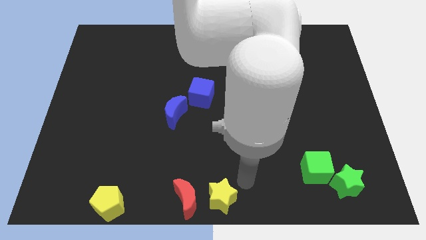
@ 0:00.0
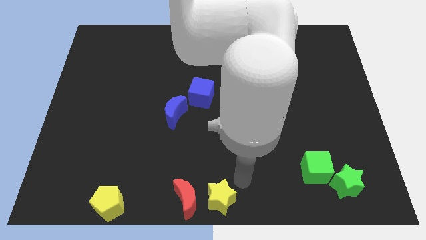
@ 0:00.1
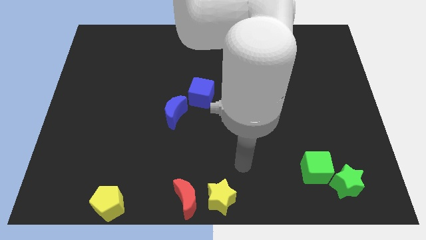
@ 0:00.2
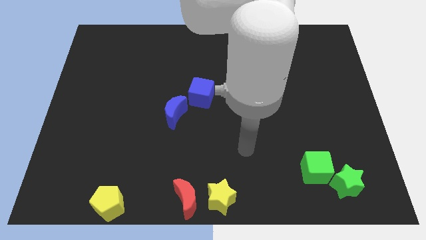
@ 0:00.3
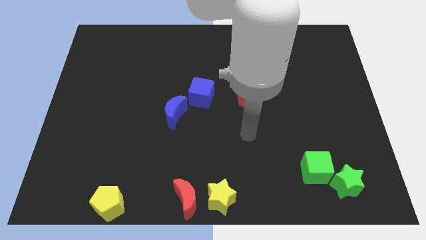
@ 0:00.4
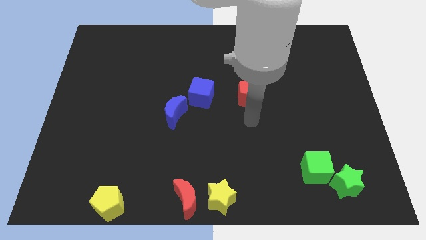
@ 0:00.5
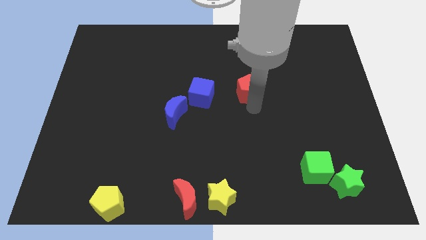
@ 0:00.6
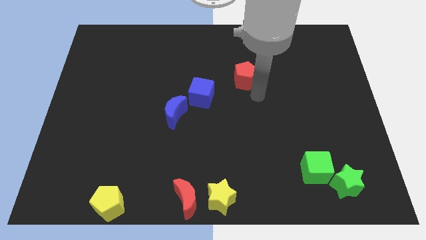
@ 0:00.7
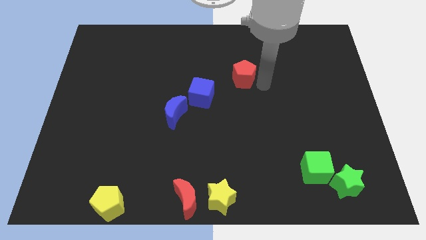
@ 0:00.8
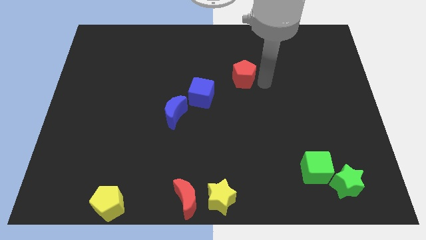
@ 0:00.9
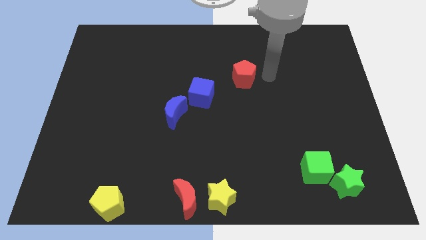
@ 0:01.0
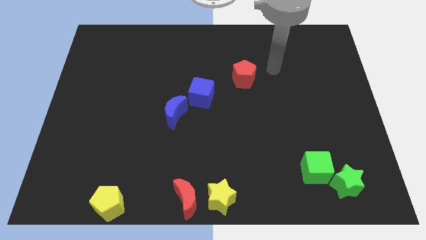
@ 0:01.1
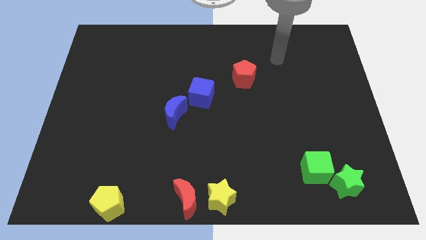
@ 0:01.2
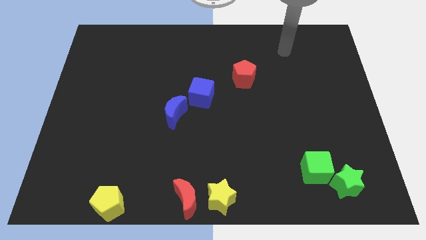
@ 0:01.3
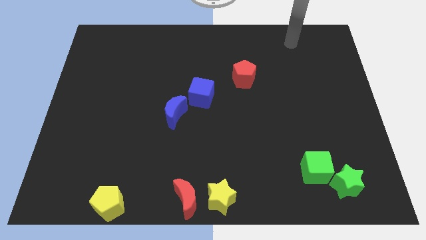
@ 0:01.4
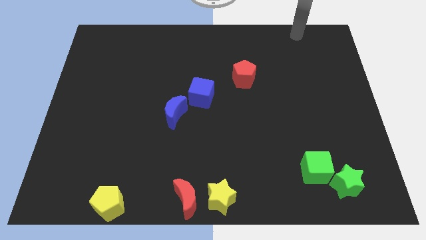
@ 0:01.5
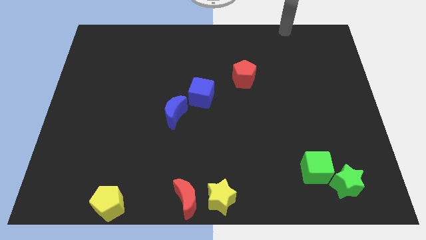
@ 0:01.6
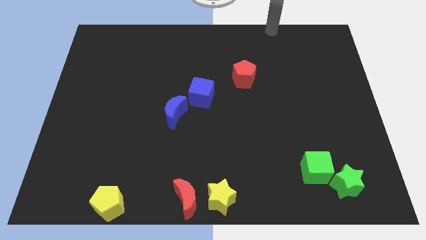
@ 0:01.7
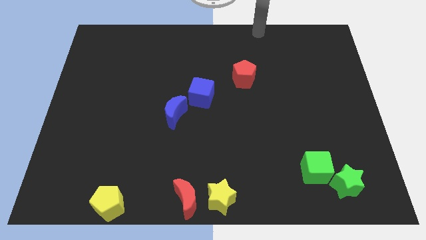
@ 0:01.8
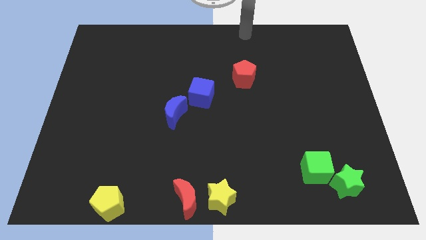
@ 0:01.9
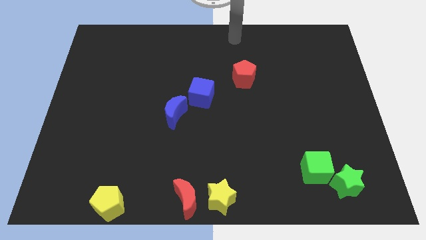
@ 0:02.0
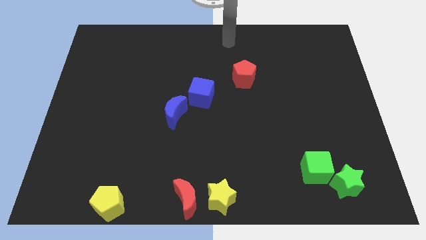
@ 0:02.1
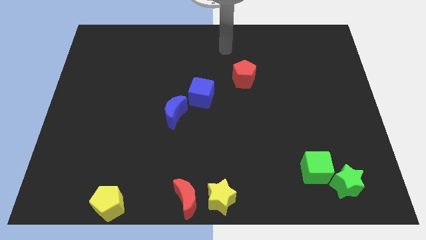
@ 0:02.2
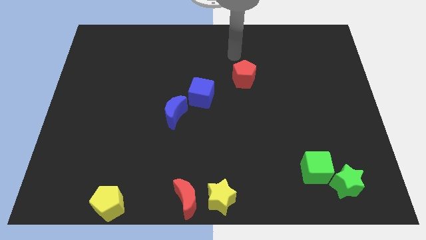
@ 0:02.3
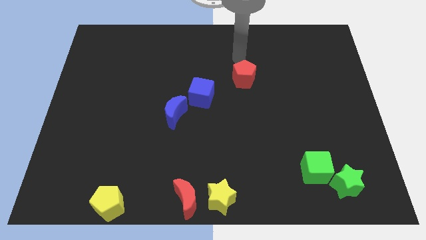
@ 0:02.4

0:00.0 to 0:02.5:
move the red pentagon slightly to the bottom

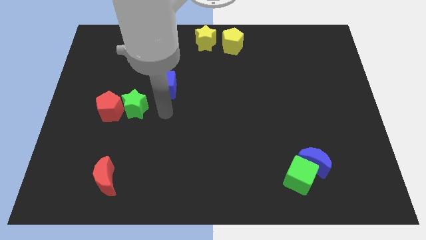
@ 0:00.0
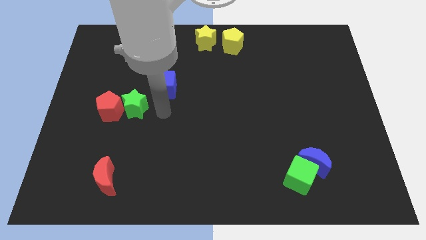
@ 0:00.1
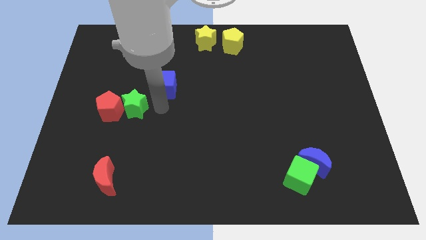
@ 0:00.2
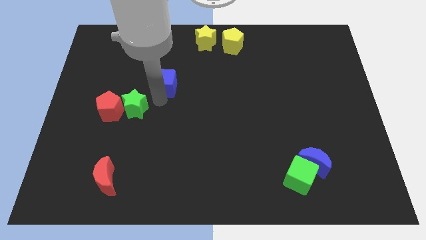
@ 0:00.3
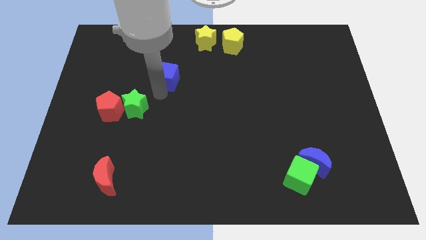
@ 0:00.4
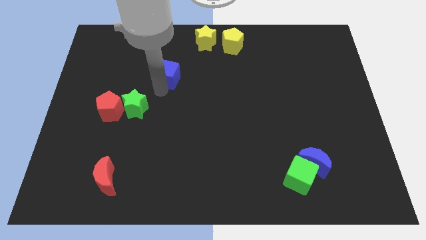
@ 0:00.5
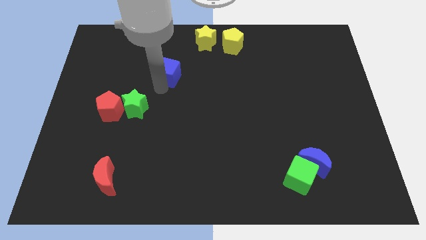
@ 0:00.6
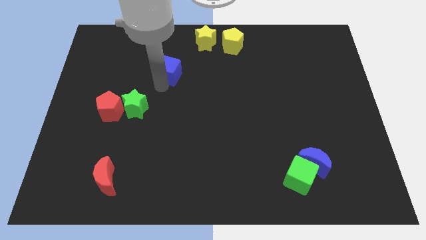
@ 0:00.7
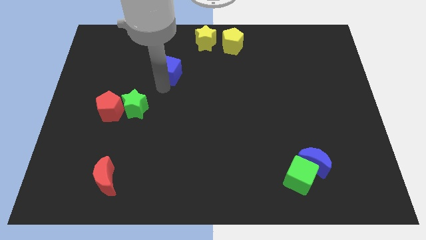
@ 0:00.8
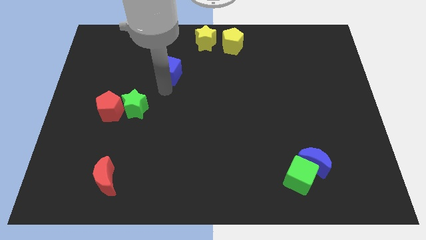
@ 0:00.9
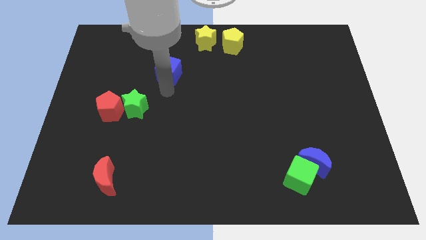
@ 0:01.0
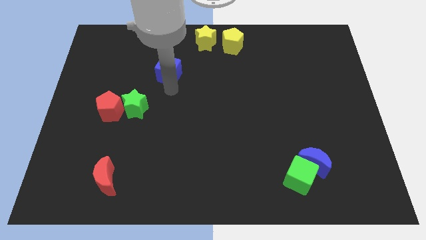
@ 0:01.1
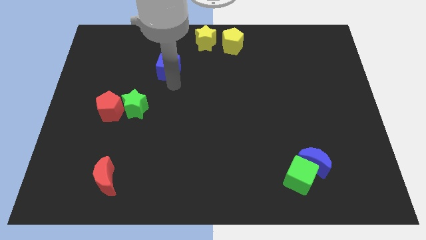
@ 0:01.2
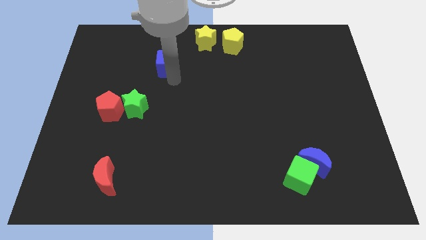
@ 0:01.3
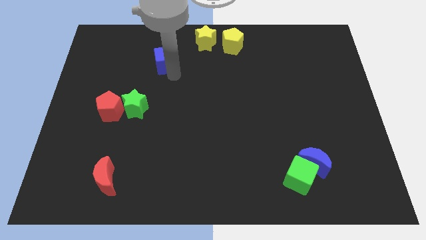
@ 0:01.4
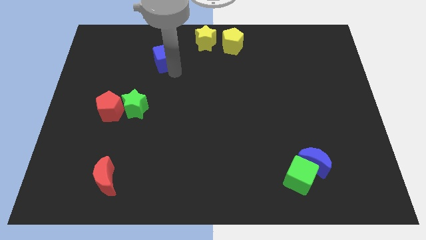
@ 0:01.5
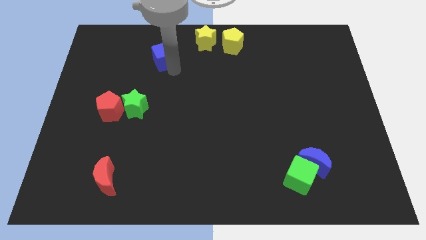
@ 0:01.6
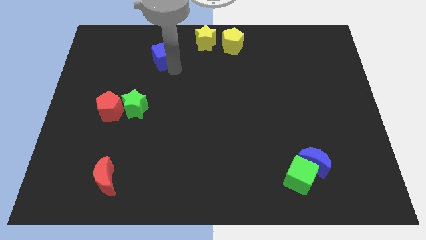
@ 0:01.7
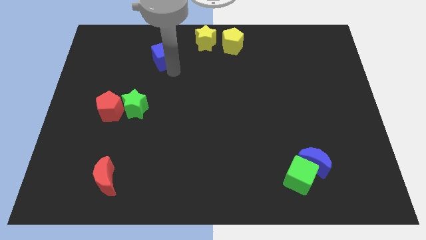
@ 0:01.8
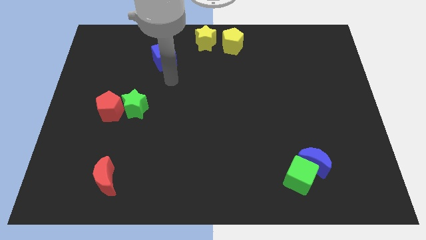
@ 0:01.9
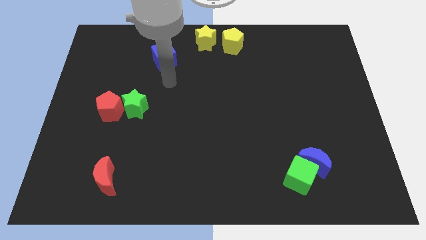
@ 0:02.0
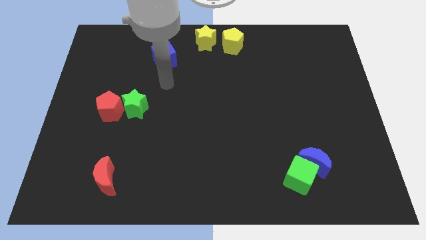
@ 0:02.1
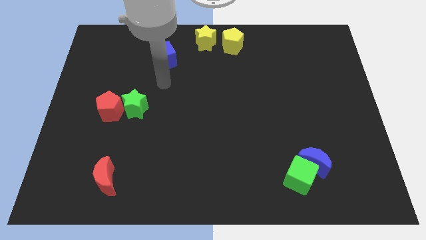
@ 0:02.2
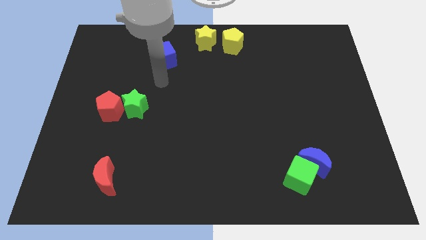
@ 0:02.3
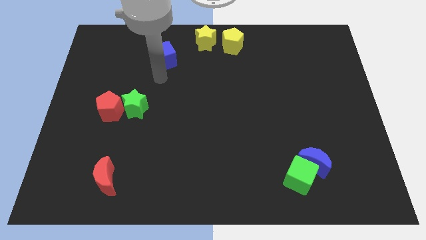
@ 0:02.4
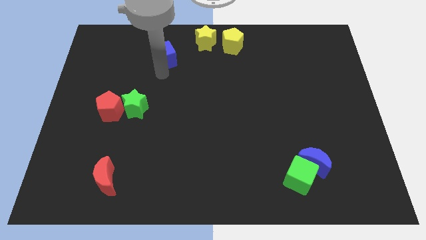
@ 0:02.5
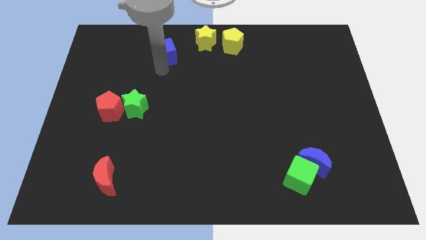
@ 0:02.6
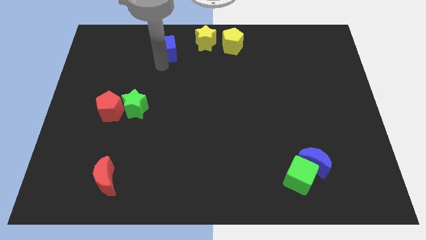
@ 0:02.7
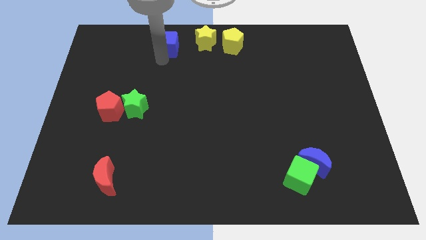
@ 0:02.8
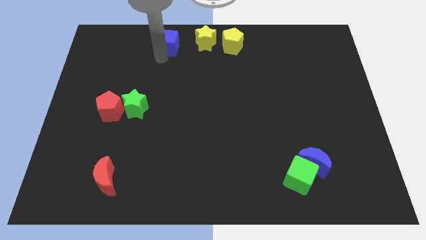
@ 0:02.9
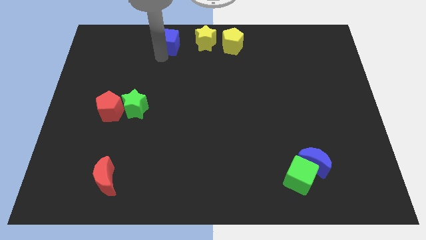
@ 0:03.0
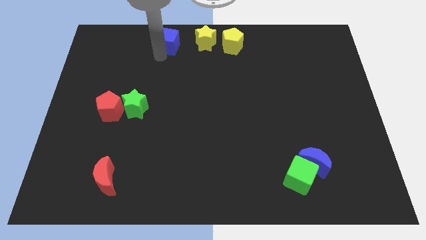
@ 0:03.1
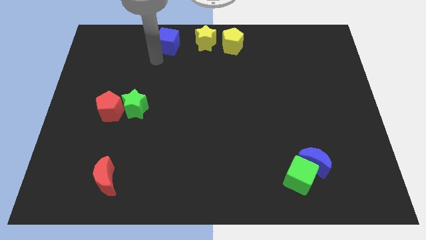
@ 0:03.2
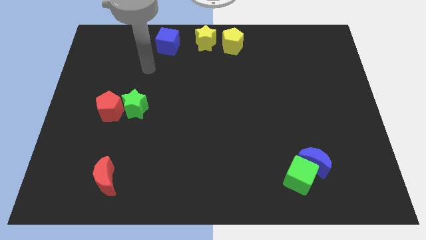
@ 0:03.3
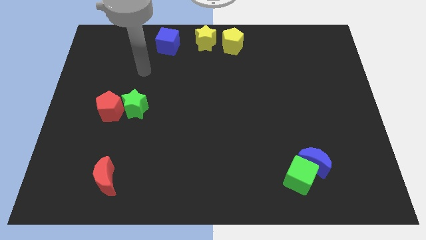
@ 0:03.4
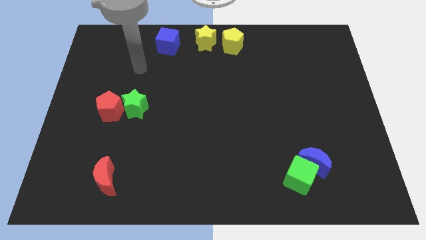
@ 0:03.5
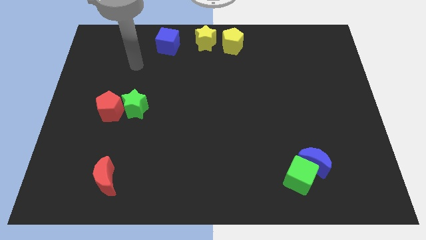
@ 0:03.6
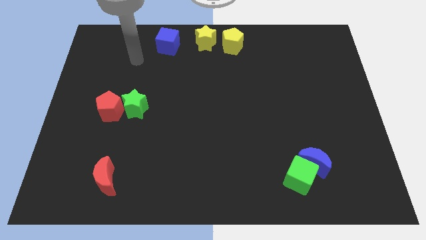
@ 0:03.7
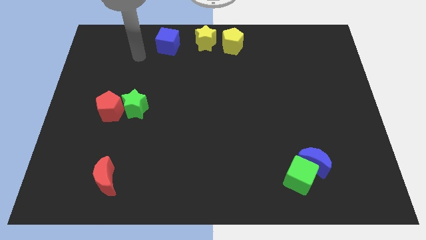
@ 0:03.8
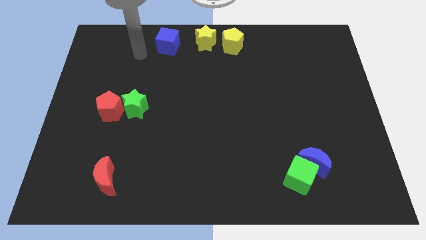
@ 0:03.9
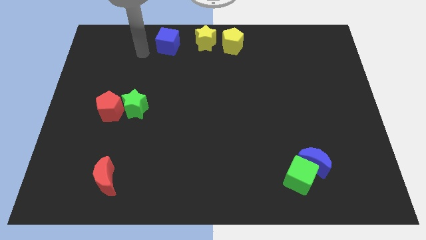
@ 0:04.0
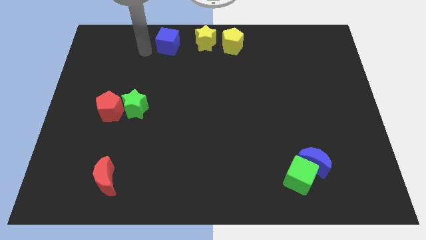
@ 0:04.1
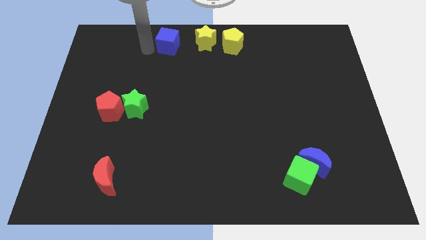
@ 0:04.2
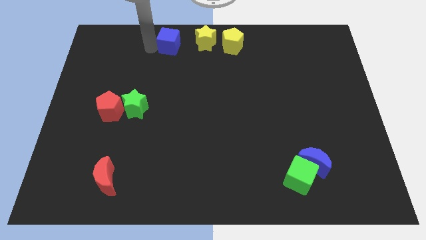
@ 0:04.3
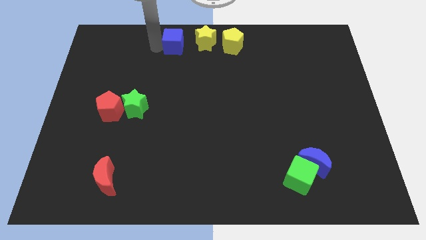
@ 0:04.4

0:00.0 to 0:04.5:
place the blue cube left to the yellow star

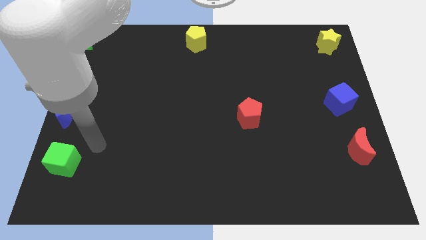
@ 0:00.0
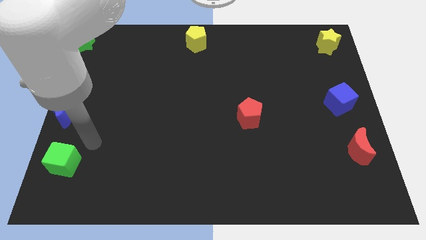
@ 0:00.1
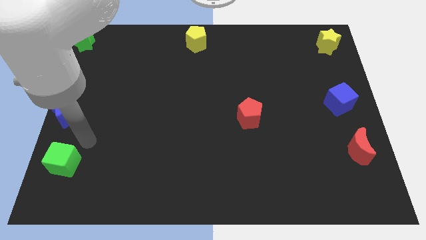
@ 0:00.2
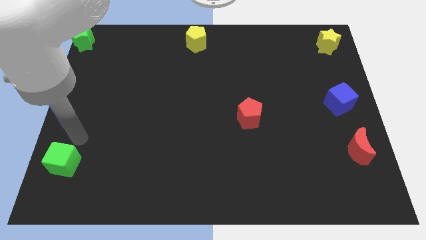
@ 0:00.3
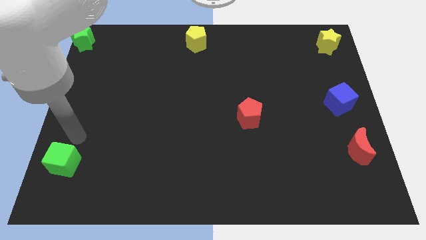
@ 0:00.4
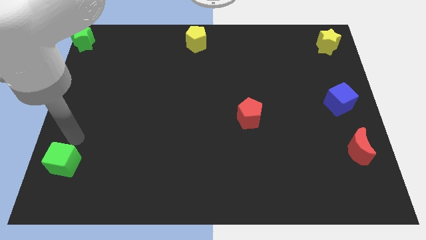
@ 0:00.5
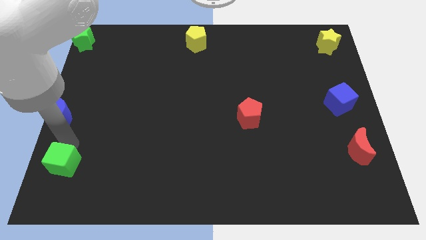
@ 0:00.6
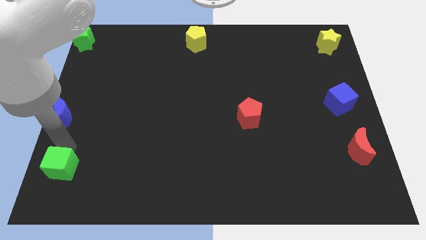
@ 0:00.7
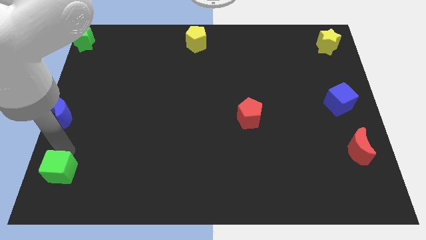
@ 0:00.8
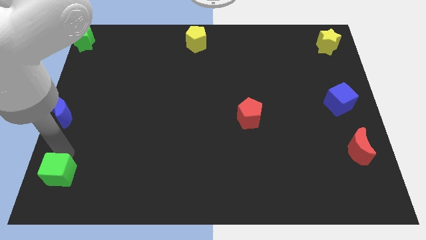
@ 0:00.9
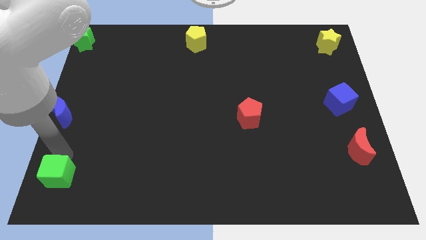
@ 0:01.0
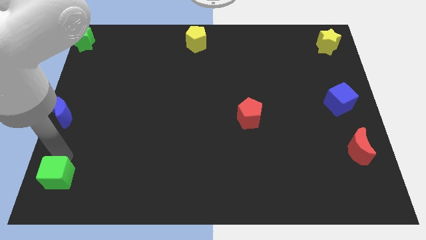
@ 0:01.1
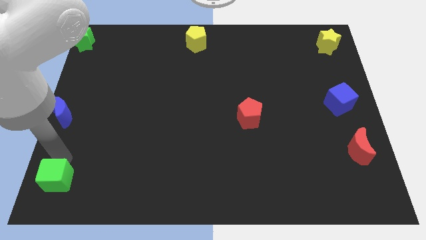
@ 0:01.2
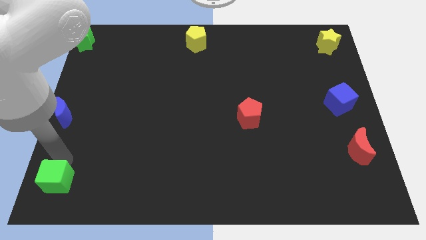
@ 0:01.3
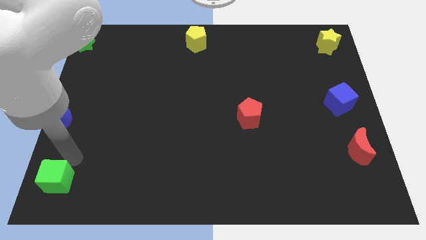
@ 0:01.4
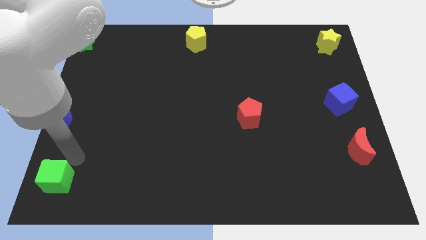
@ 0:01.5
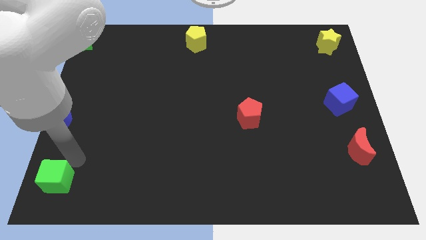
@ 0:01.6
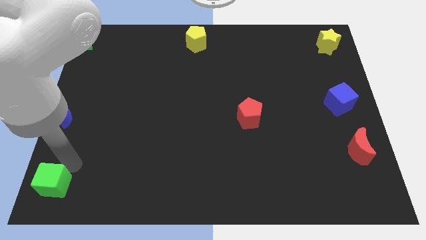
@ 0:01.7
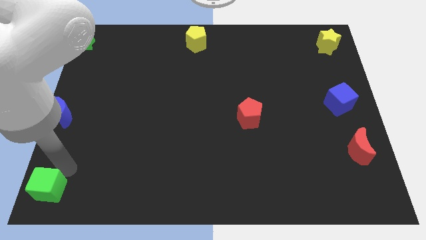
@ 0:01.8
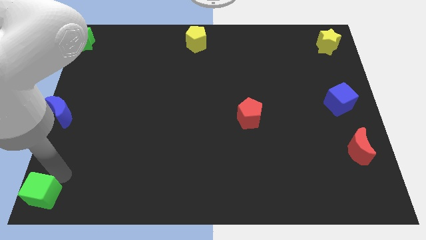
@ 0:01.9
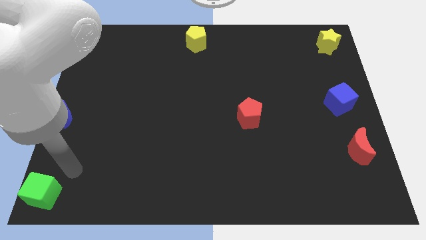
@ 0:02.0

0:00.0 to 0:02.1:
place the green cube at the bottom left corner of the board

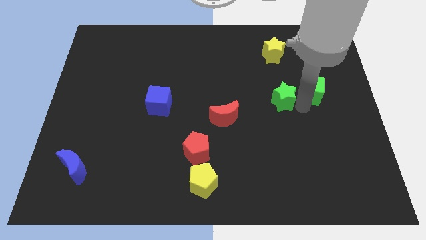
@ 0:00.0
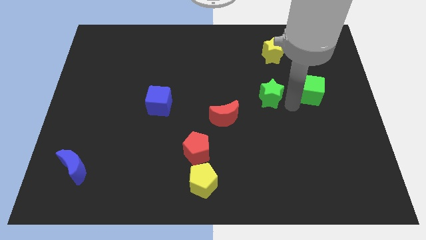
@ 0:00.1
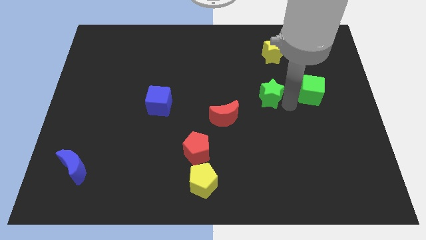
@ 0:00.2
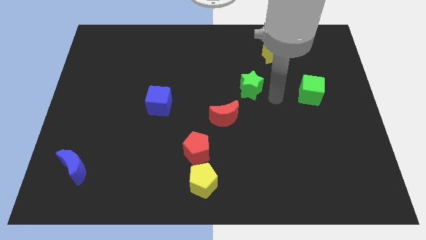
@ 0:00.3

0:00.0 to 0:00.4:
separate the green star from the green cube
